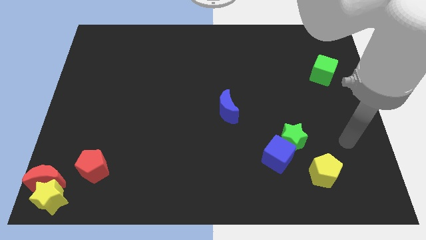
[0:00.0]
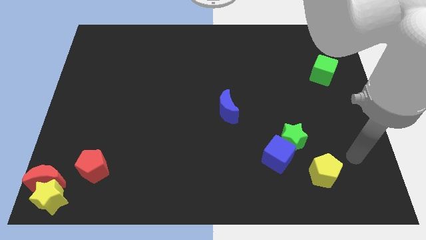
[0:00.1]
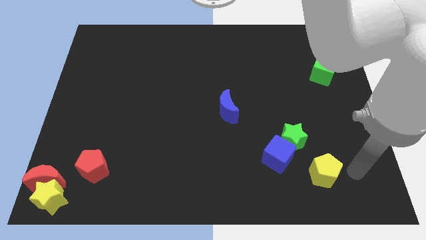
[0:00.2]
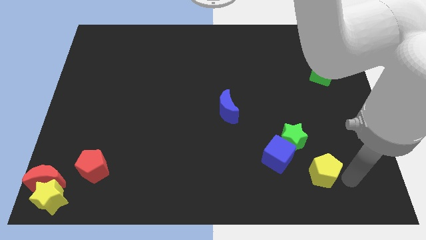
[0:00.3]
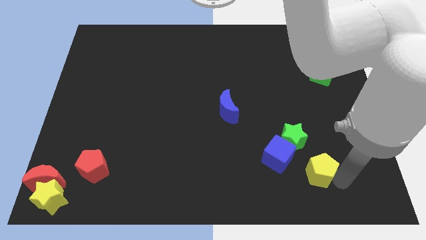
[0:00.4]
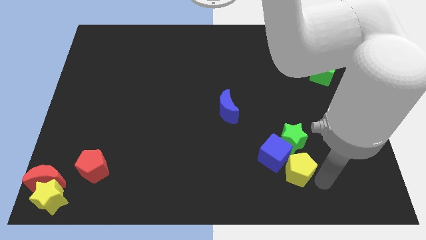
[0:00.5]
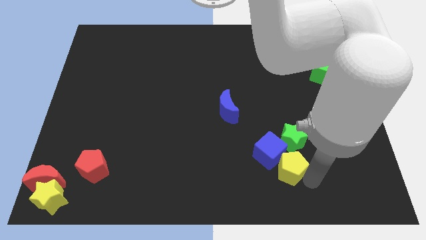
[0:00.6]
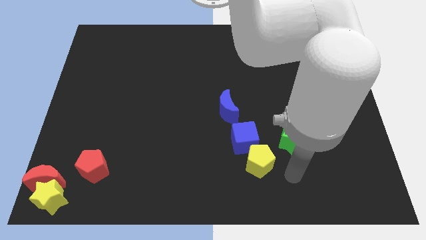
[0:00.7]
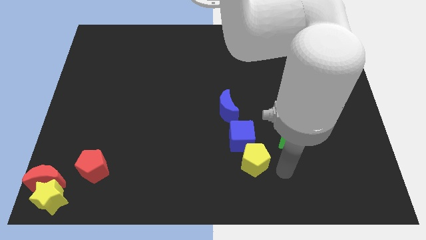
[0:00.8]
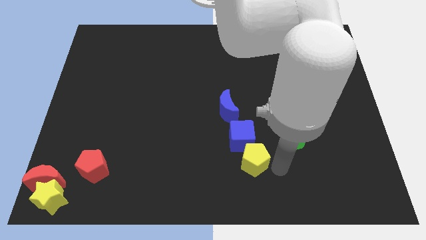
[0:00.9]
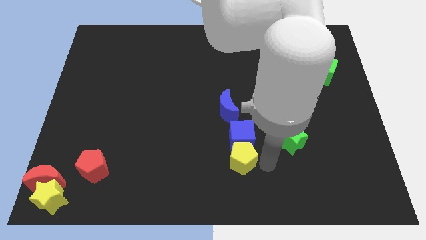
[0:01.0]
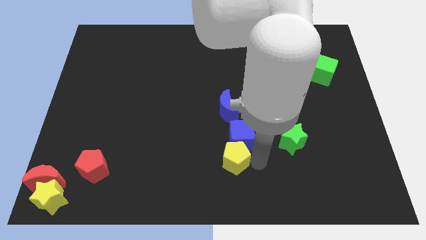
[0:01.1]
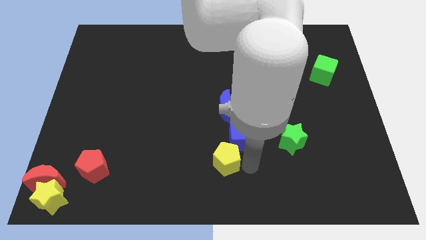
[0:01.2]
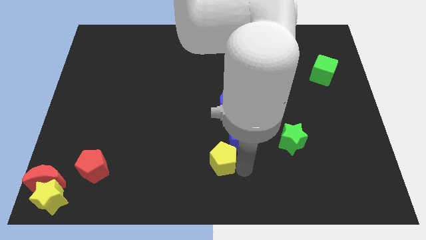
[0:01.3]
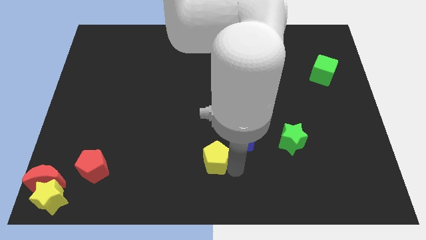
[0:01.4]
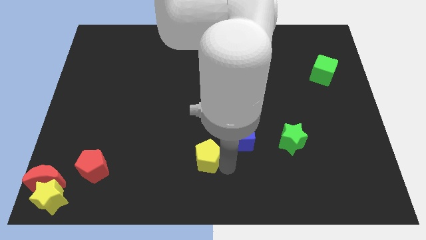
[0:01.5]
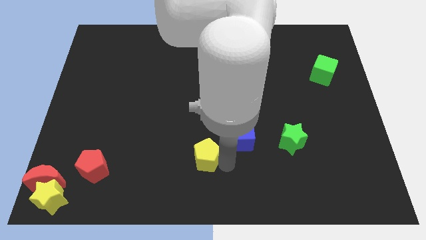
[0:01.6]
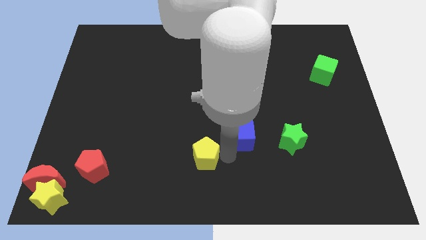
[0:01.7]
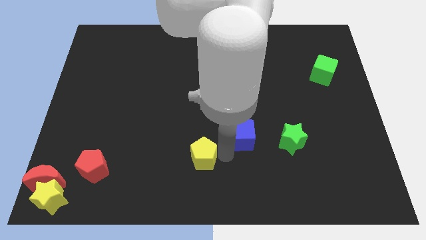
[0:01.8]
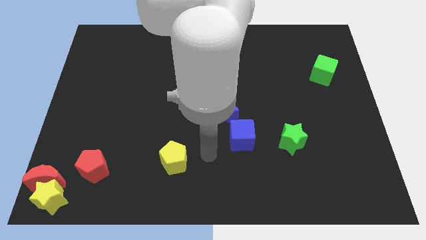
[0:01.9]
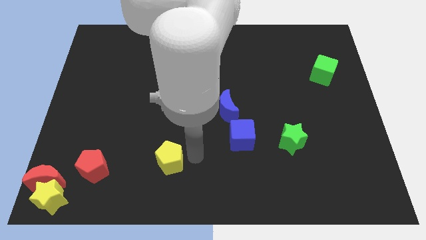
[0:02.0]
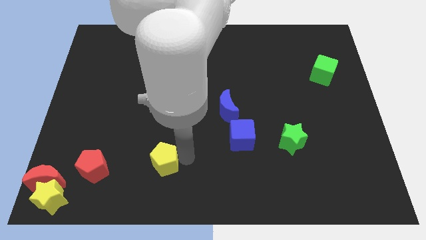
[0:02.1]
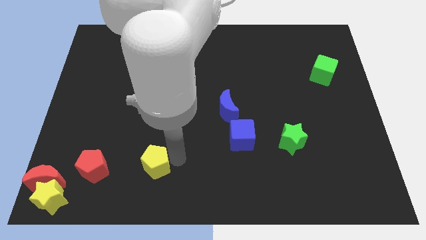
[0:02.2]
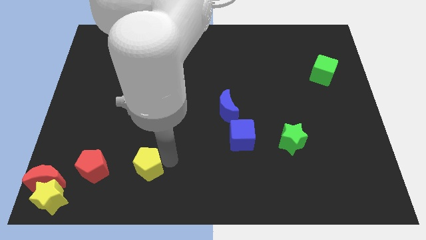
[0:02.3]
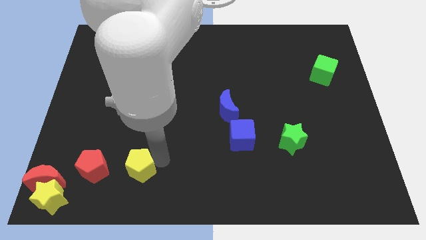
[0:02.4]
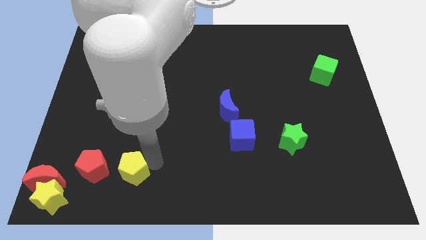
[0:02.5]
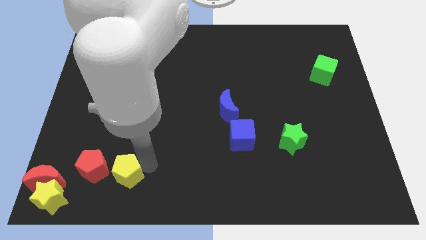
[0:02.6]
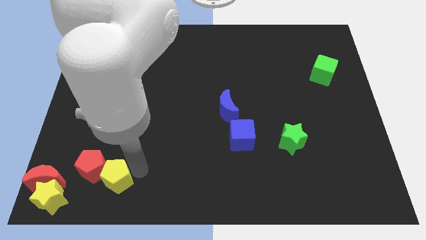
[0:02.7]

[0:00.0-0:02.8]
place the yellow pentagon right to the red pentagon

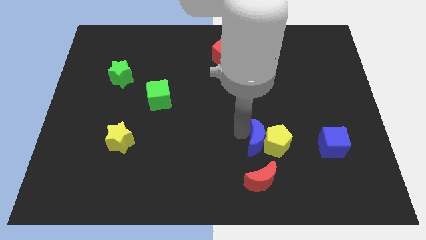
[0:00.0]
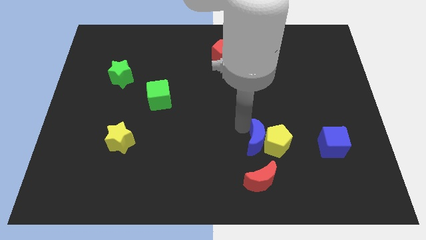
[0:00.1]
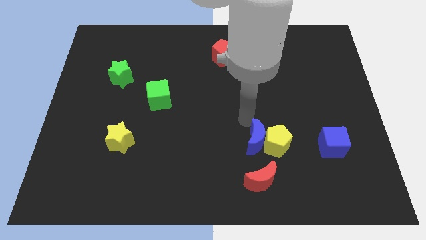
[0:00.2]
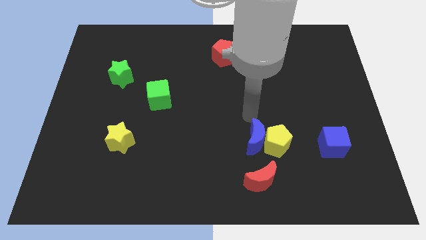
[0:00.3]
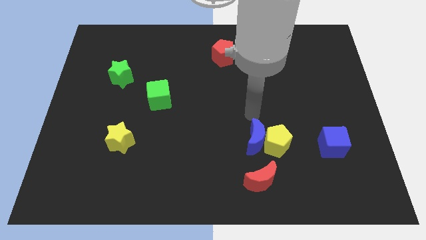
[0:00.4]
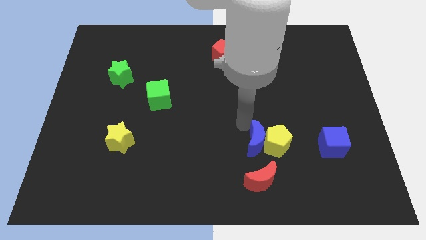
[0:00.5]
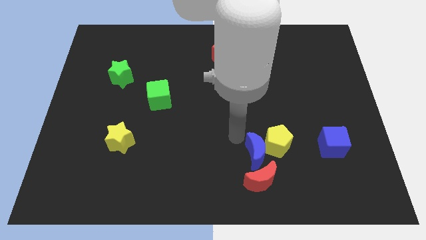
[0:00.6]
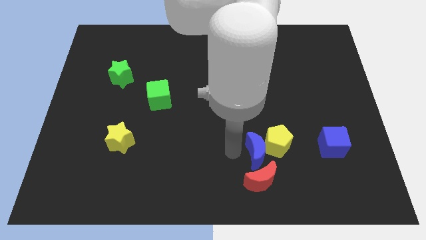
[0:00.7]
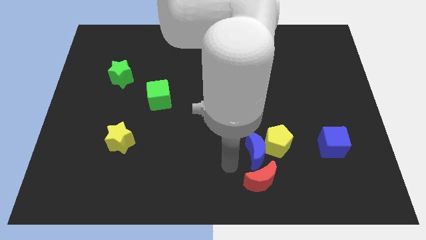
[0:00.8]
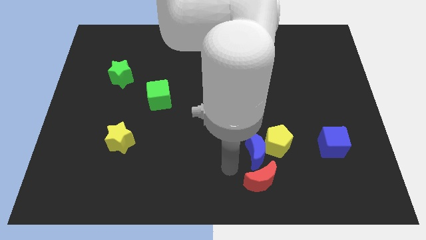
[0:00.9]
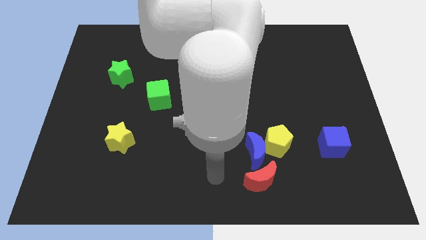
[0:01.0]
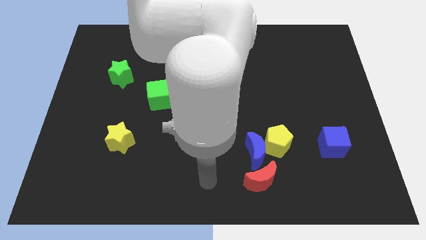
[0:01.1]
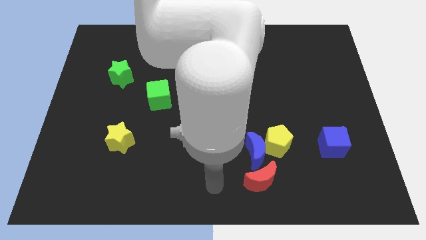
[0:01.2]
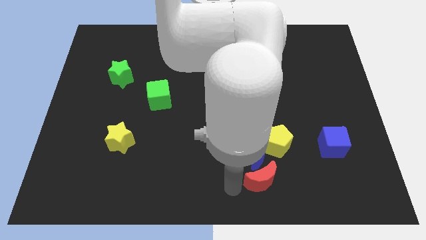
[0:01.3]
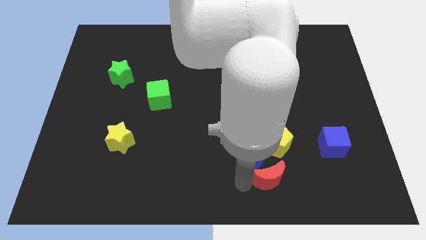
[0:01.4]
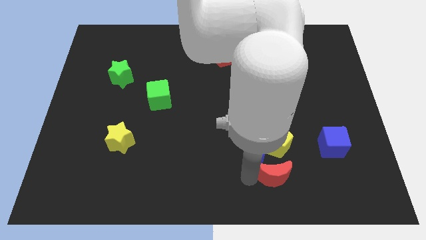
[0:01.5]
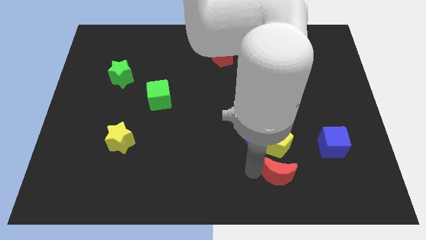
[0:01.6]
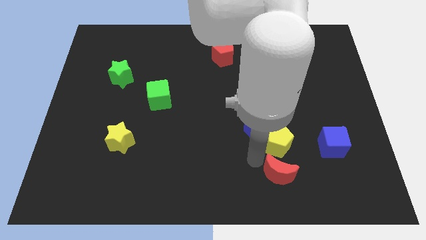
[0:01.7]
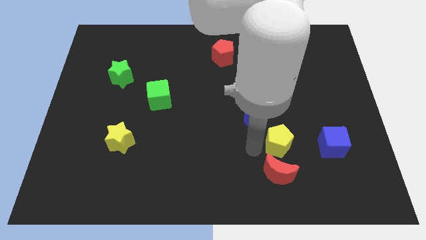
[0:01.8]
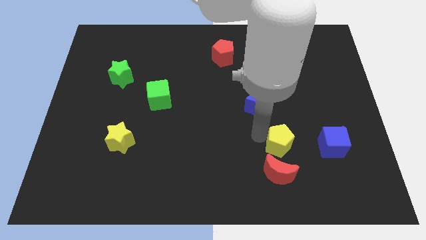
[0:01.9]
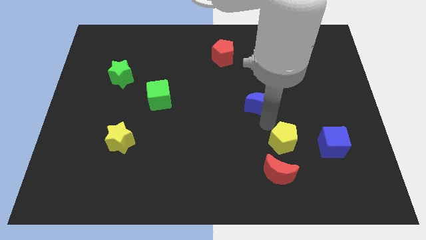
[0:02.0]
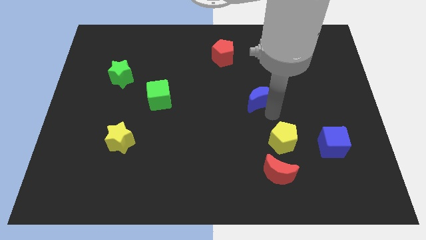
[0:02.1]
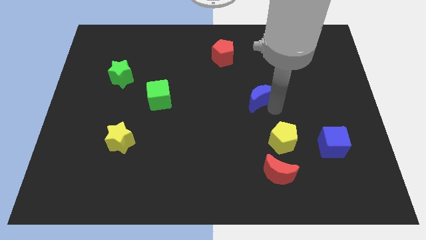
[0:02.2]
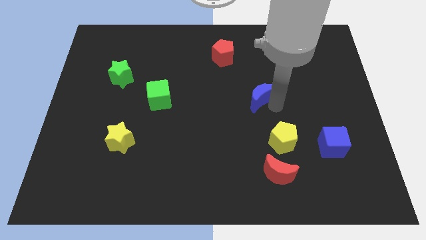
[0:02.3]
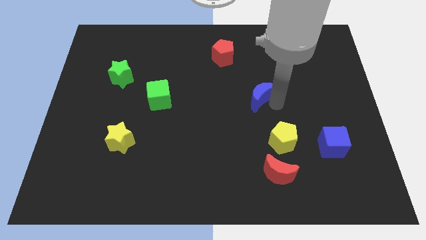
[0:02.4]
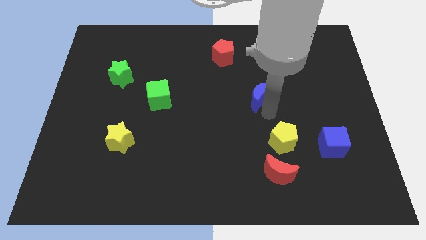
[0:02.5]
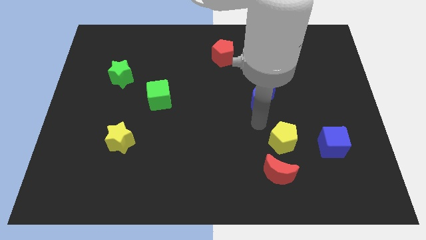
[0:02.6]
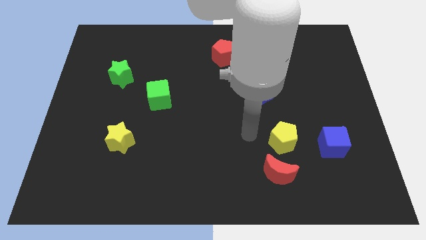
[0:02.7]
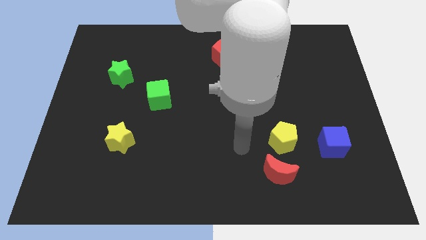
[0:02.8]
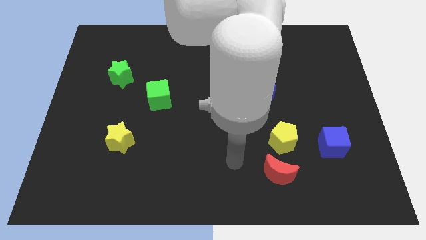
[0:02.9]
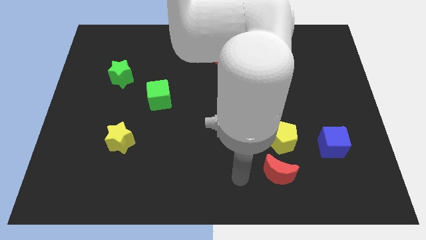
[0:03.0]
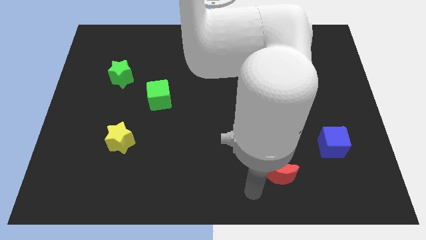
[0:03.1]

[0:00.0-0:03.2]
separate the blue moon from the yellow pentagon

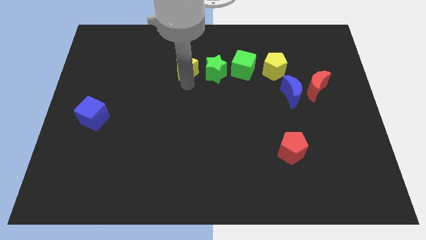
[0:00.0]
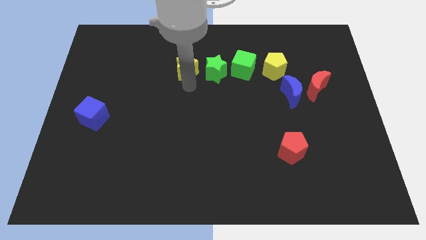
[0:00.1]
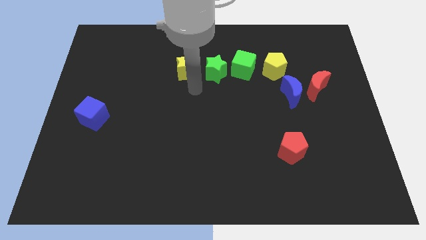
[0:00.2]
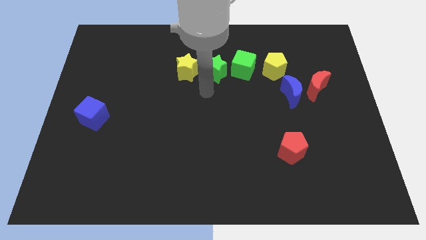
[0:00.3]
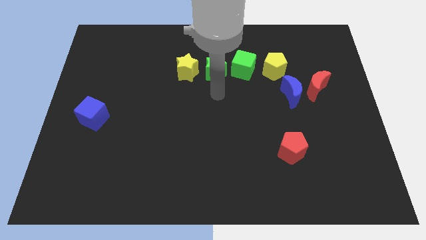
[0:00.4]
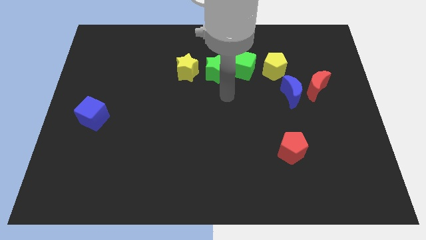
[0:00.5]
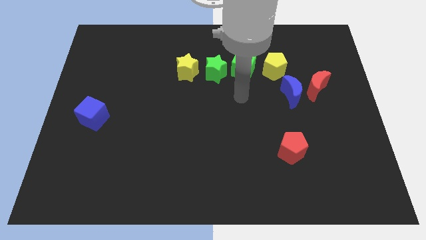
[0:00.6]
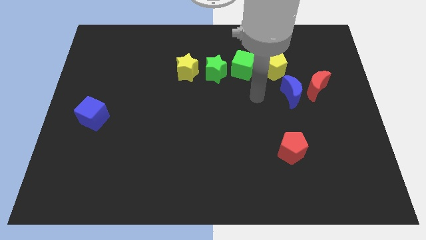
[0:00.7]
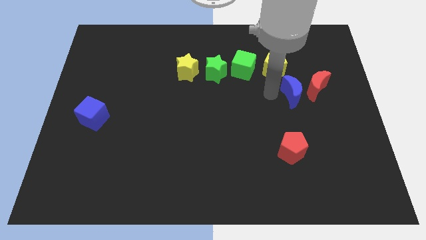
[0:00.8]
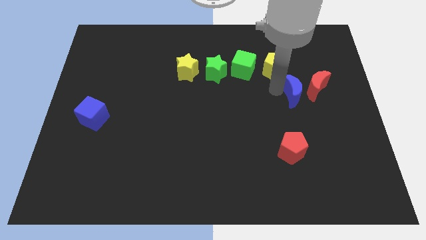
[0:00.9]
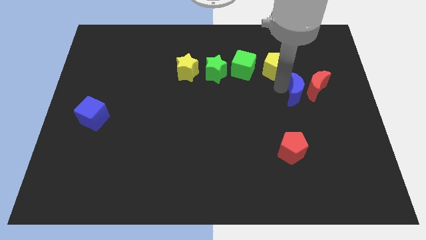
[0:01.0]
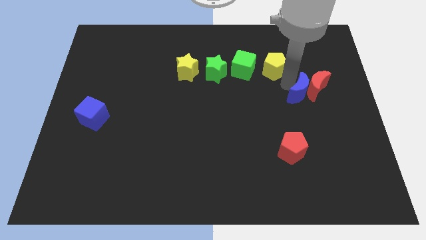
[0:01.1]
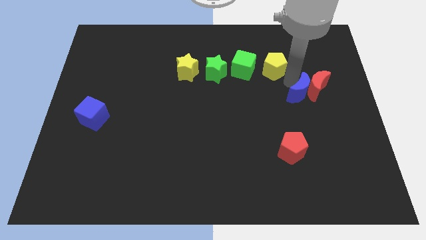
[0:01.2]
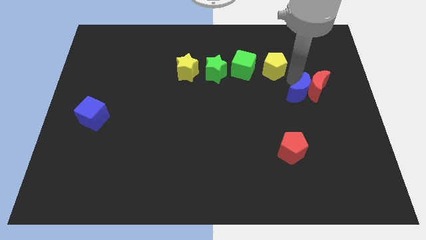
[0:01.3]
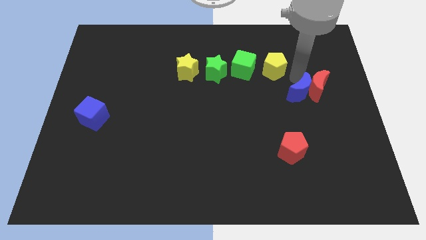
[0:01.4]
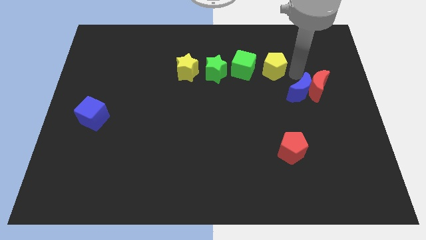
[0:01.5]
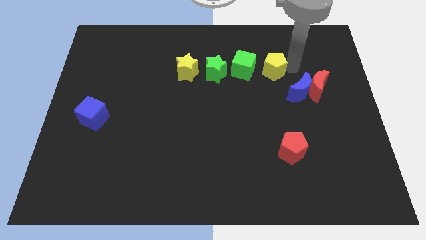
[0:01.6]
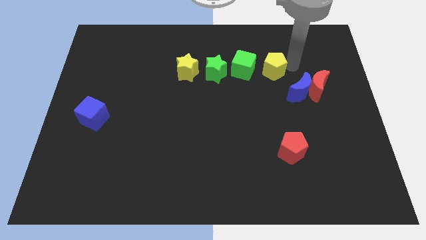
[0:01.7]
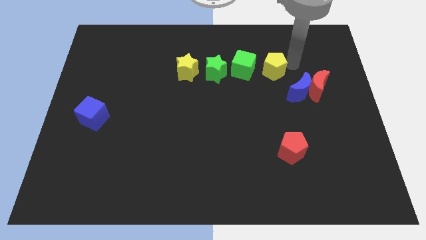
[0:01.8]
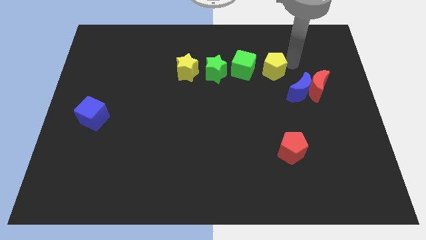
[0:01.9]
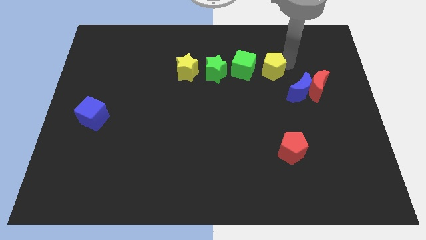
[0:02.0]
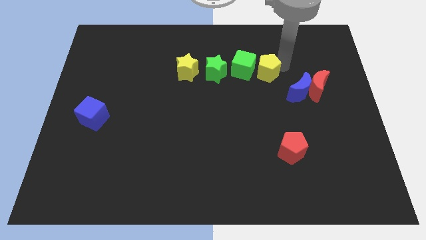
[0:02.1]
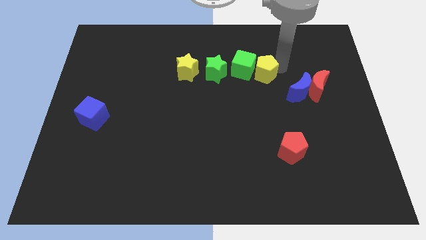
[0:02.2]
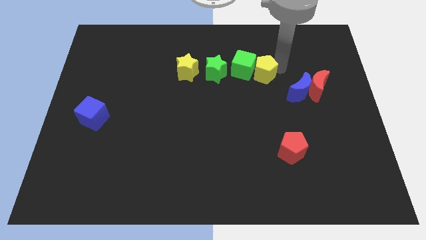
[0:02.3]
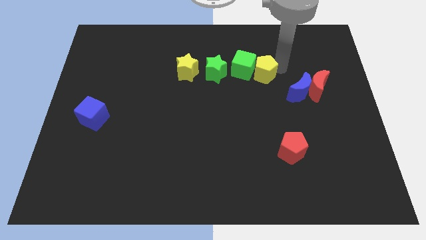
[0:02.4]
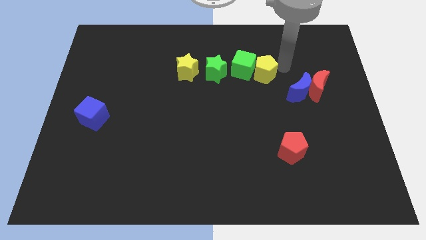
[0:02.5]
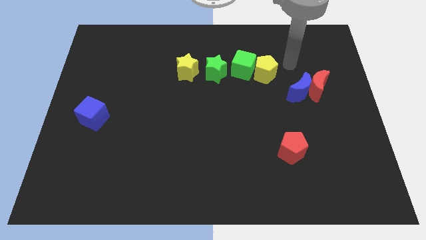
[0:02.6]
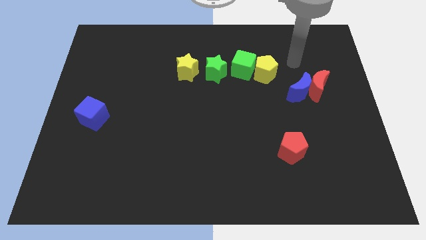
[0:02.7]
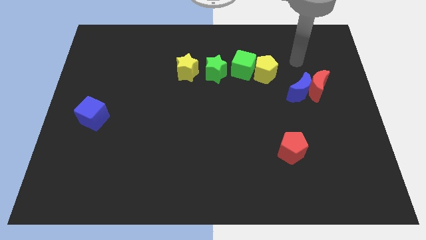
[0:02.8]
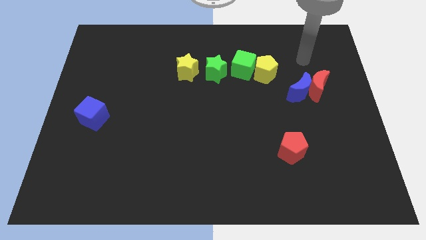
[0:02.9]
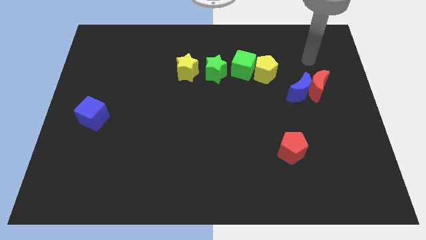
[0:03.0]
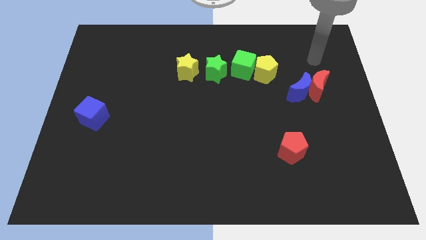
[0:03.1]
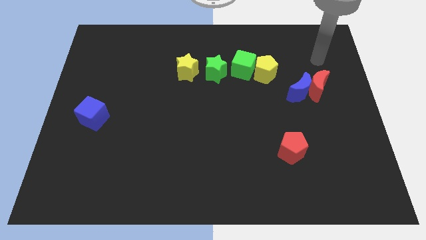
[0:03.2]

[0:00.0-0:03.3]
make the yellow pentagon to touch the right side of the green cube
